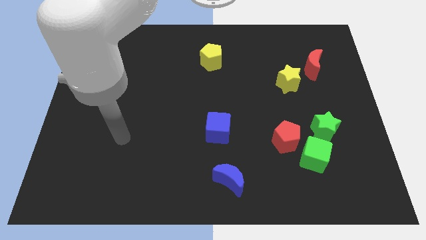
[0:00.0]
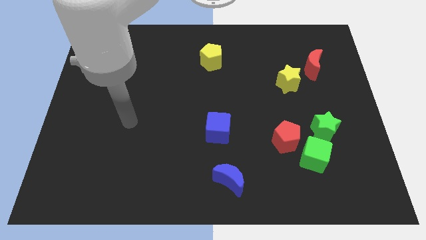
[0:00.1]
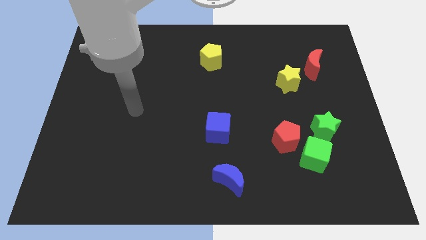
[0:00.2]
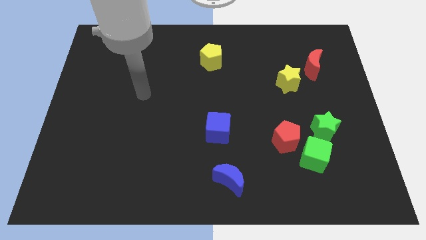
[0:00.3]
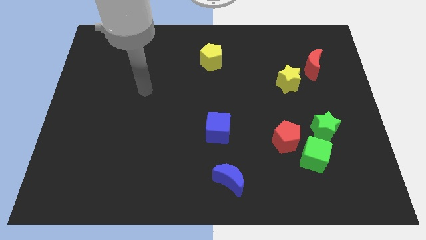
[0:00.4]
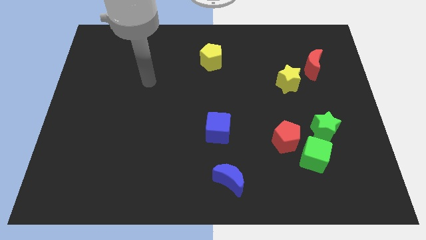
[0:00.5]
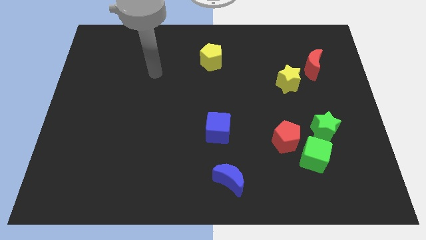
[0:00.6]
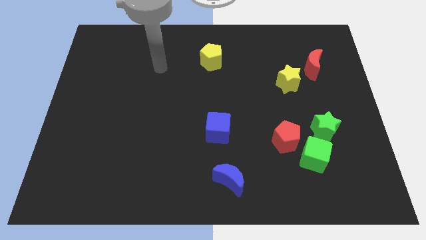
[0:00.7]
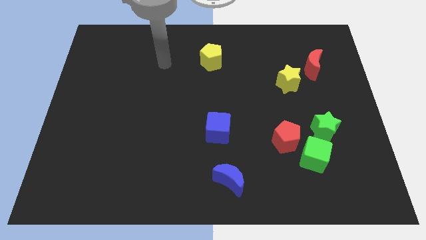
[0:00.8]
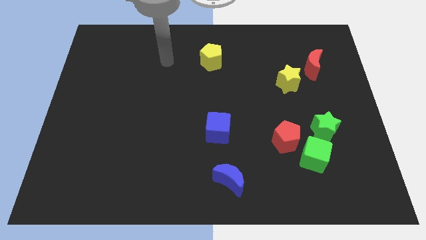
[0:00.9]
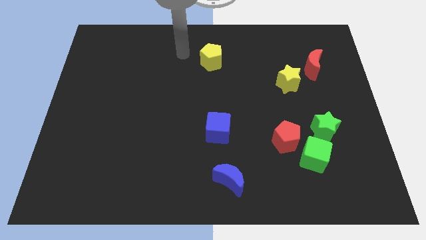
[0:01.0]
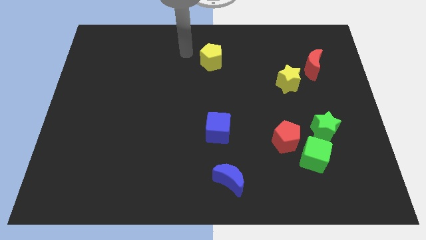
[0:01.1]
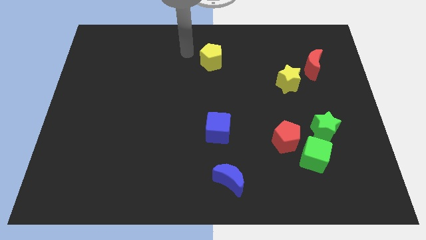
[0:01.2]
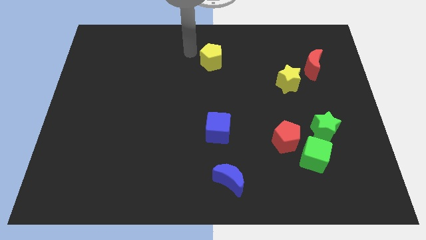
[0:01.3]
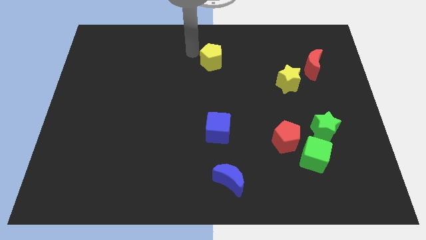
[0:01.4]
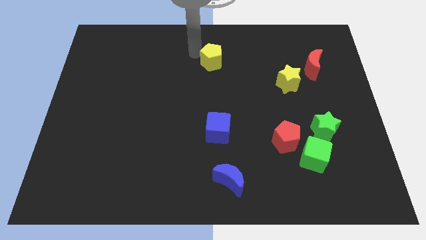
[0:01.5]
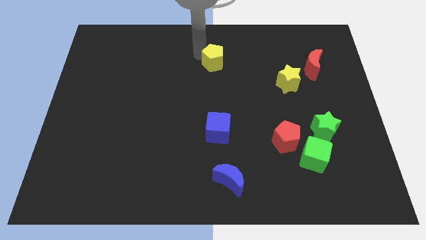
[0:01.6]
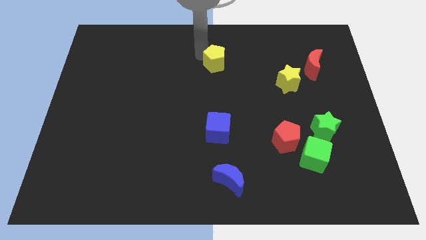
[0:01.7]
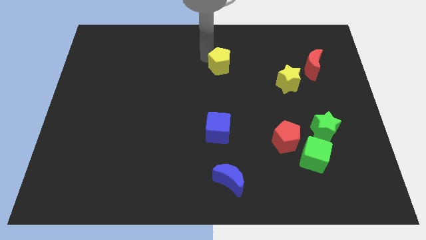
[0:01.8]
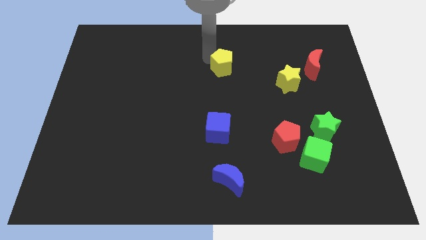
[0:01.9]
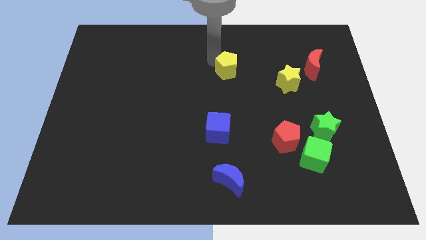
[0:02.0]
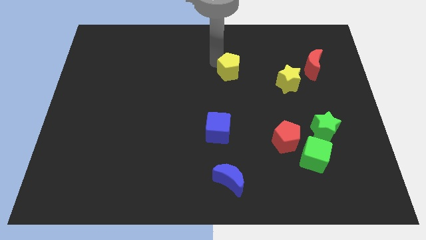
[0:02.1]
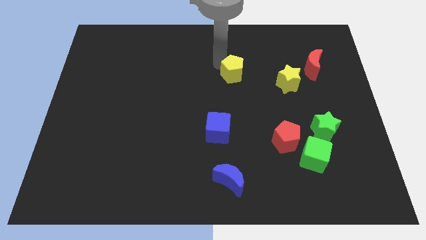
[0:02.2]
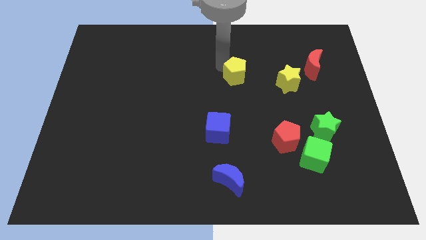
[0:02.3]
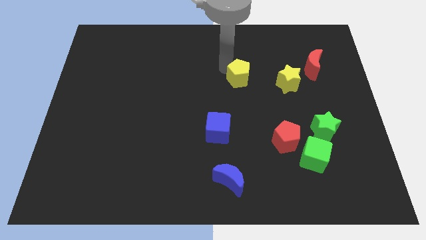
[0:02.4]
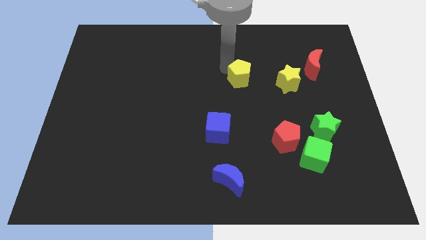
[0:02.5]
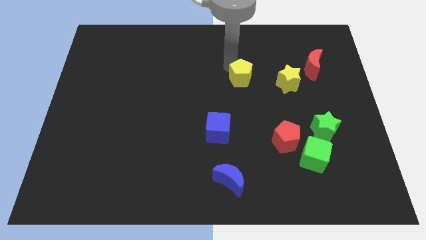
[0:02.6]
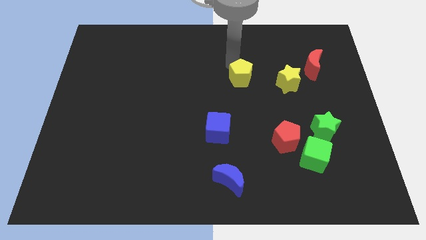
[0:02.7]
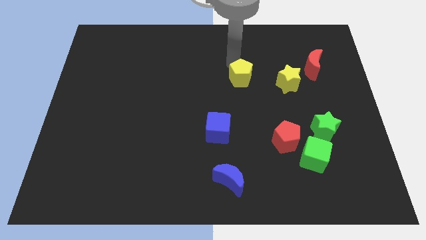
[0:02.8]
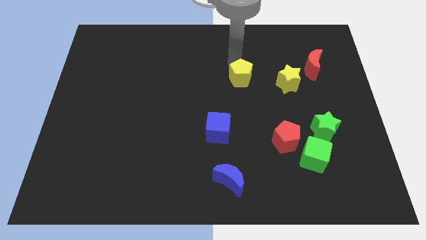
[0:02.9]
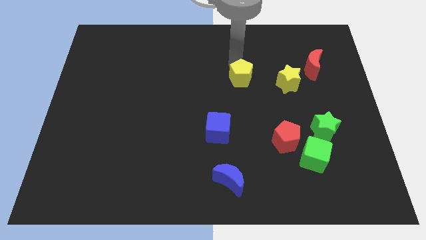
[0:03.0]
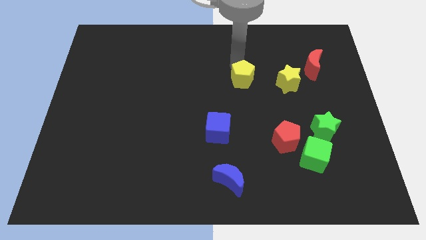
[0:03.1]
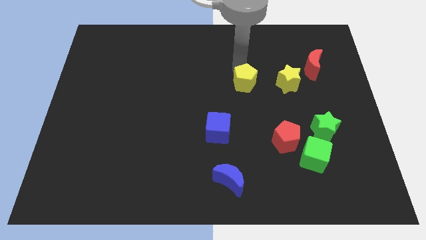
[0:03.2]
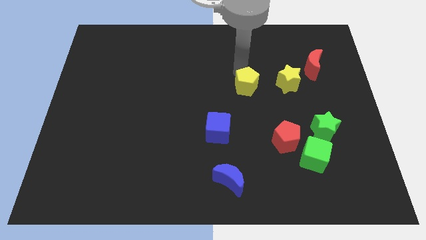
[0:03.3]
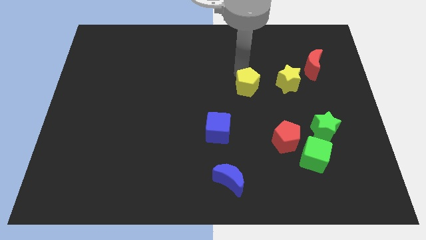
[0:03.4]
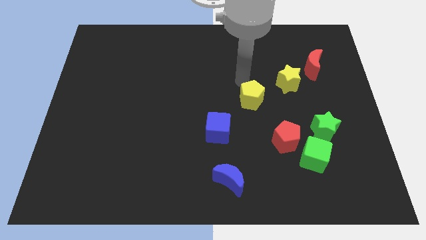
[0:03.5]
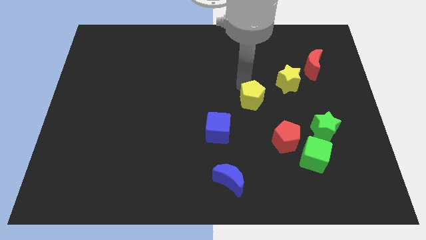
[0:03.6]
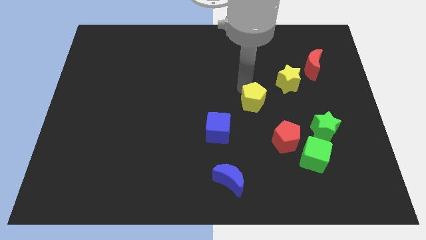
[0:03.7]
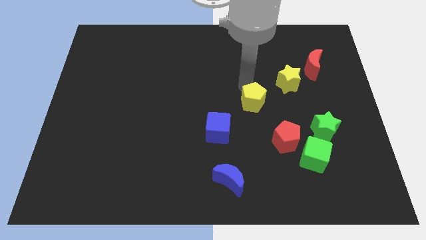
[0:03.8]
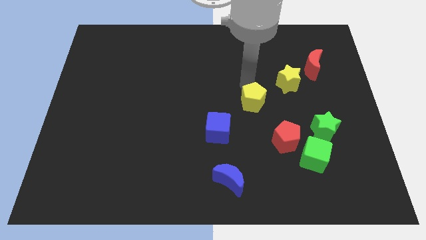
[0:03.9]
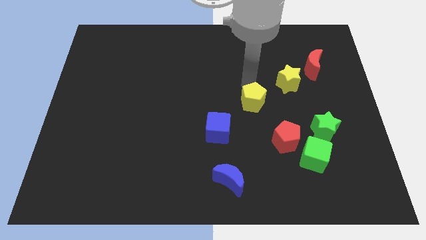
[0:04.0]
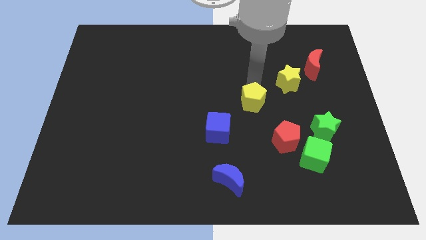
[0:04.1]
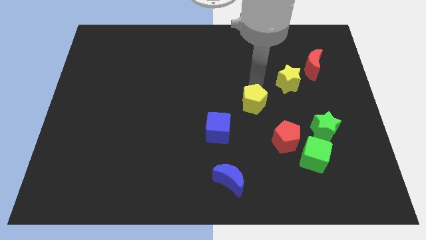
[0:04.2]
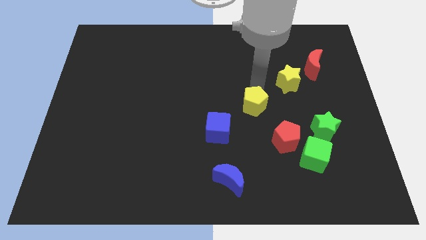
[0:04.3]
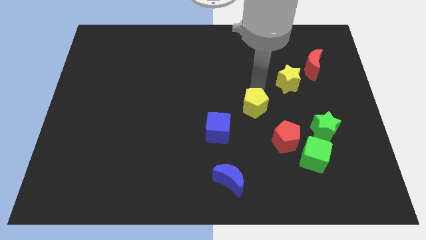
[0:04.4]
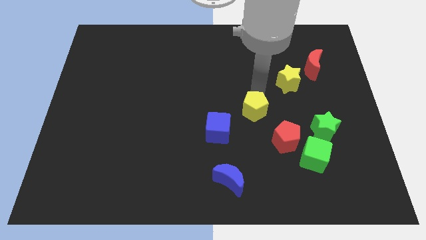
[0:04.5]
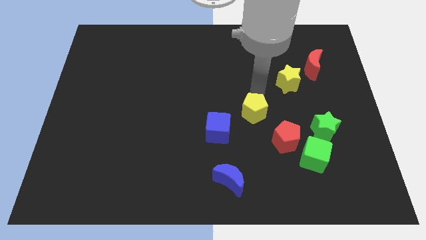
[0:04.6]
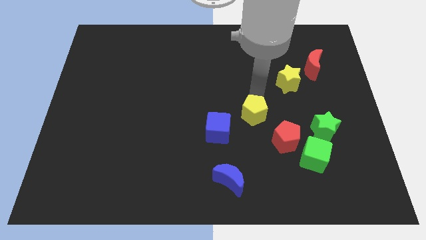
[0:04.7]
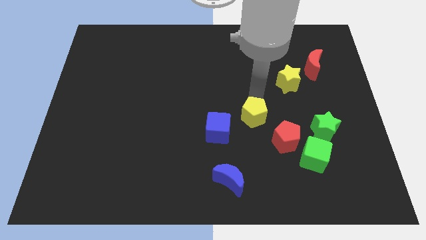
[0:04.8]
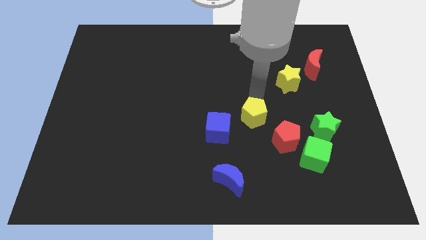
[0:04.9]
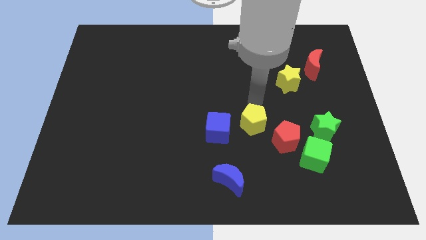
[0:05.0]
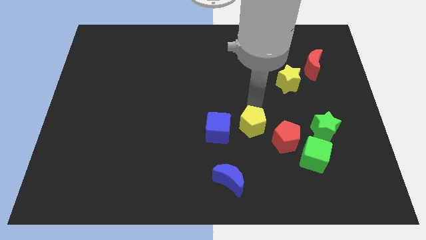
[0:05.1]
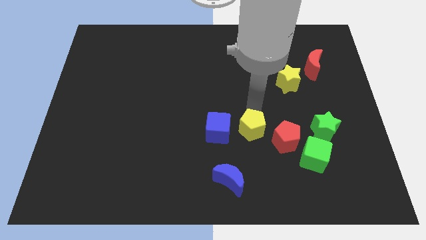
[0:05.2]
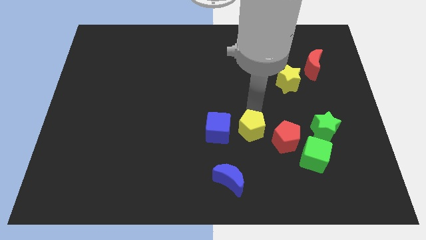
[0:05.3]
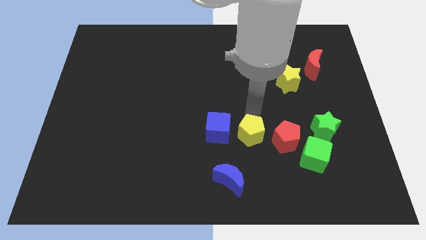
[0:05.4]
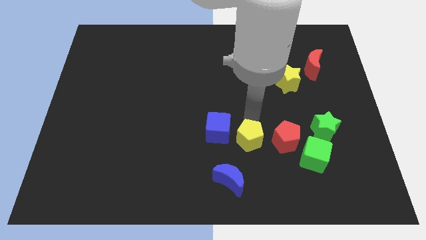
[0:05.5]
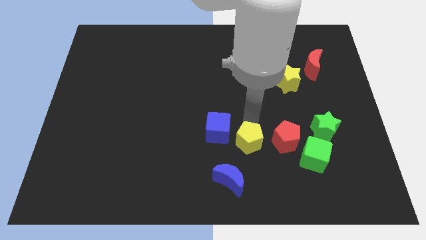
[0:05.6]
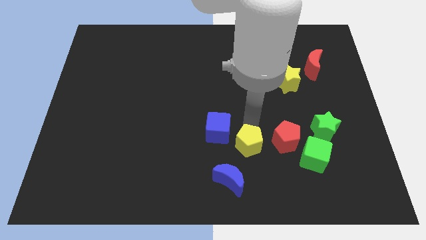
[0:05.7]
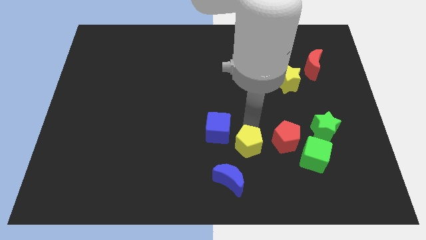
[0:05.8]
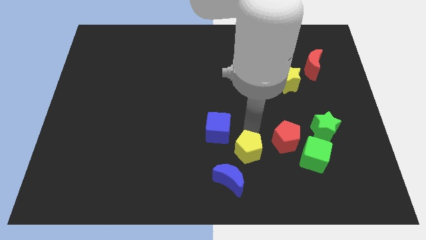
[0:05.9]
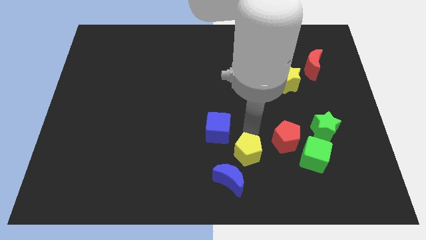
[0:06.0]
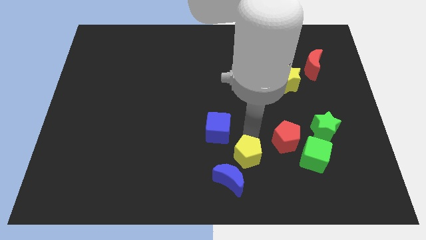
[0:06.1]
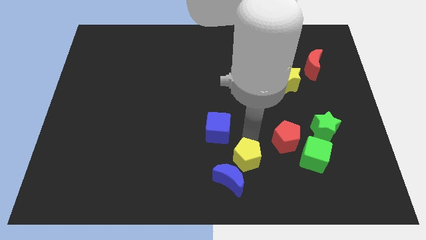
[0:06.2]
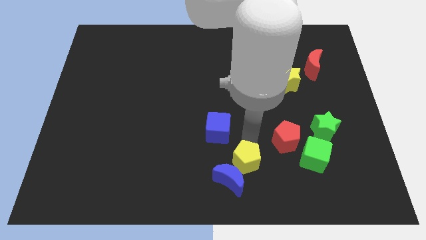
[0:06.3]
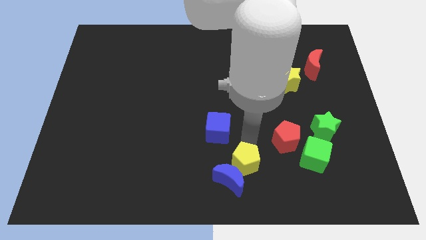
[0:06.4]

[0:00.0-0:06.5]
slide the yellow pentagon close to the blue moon

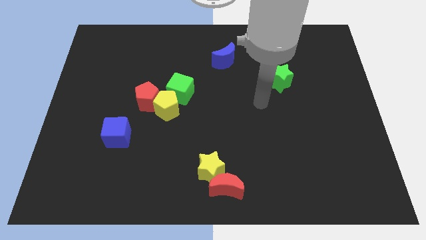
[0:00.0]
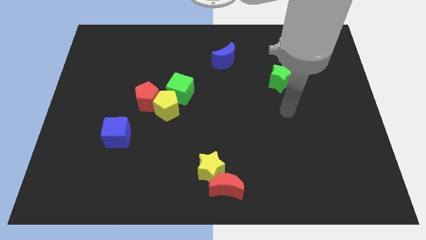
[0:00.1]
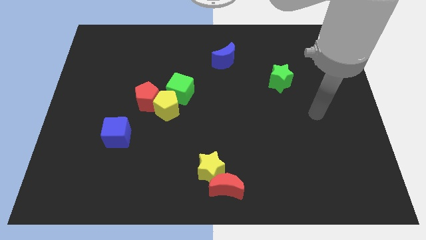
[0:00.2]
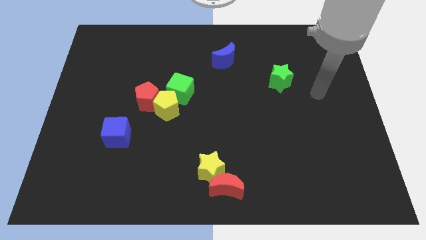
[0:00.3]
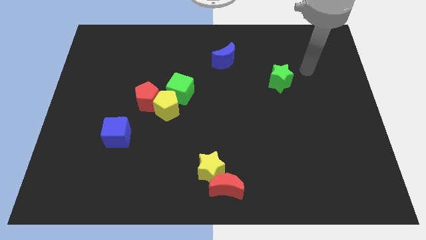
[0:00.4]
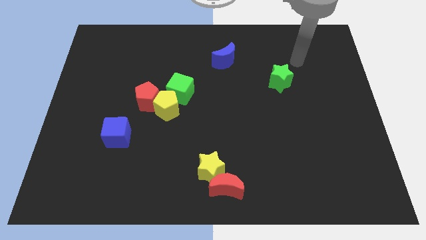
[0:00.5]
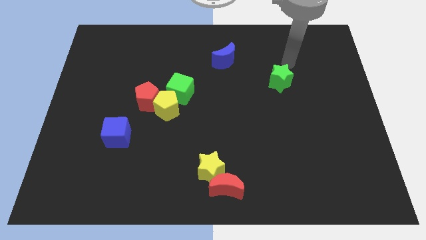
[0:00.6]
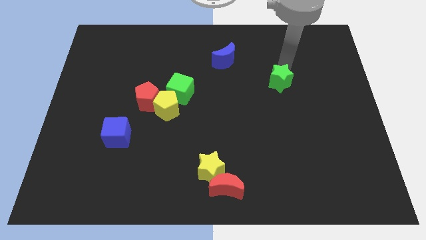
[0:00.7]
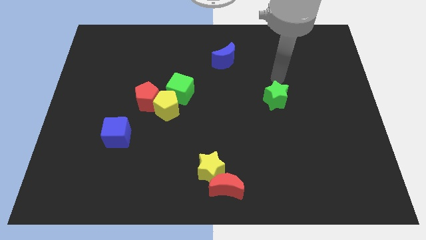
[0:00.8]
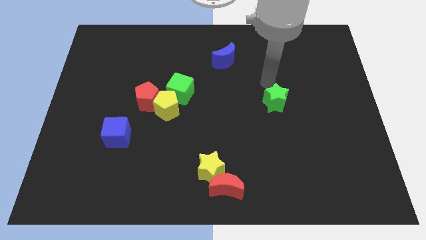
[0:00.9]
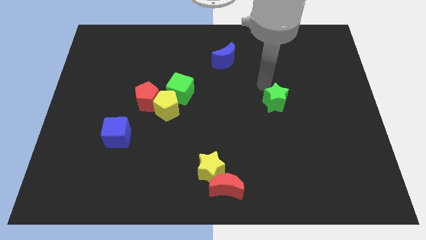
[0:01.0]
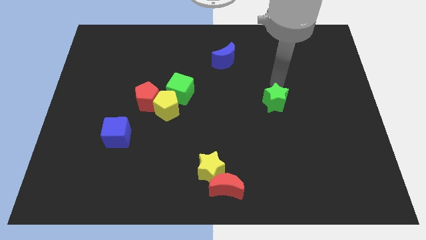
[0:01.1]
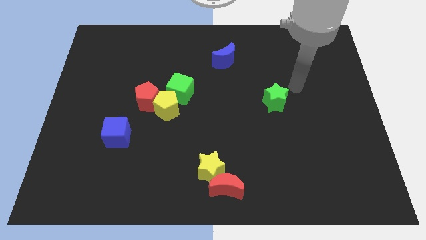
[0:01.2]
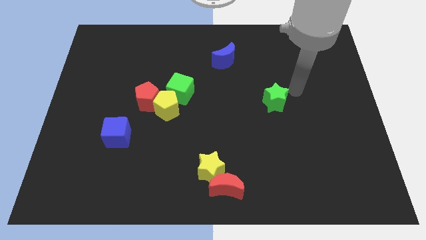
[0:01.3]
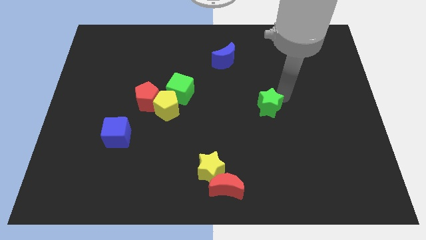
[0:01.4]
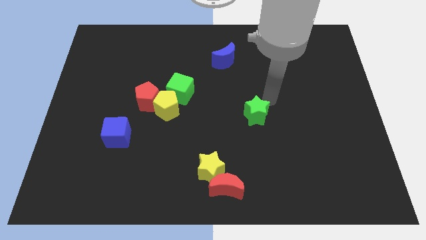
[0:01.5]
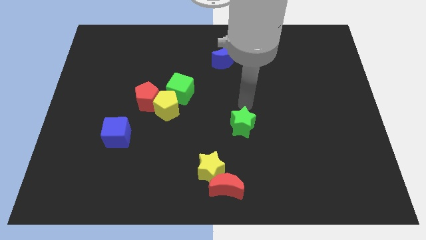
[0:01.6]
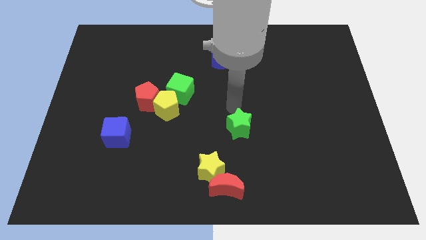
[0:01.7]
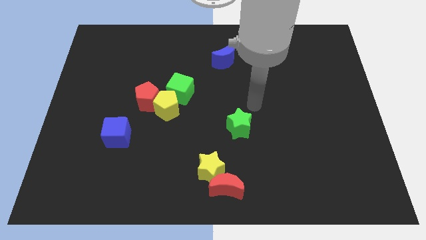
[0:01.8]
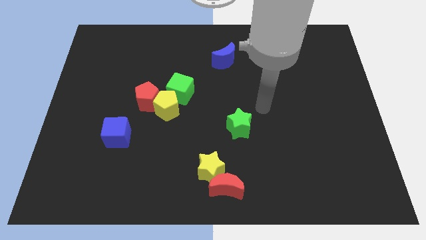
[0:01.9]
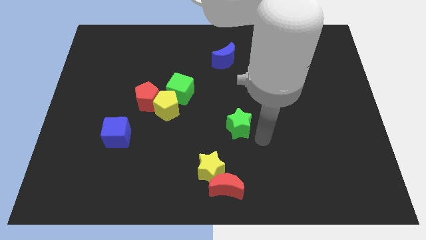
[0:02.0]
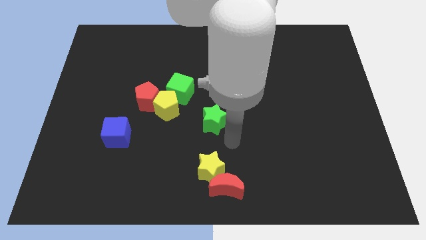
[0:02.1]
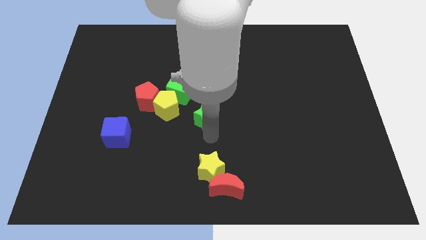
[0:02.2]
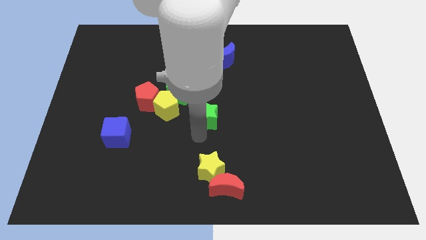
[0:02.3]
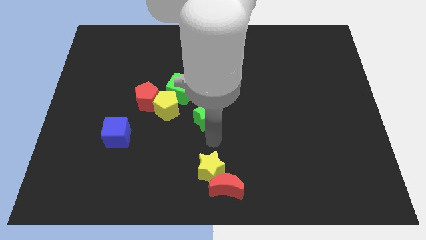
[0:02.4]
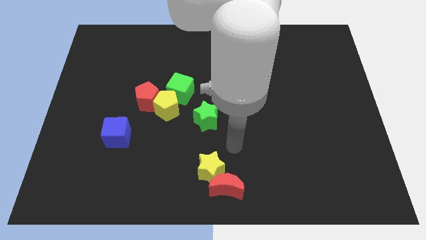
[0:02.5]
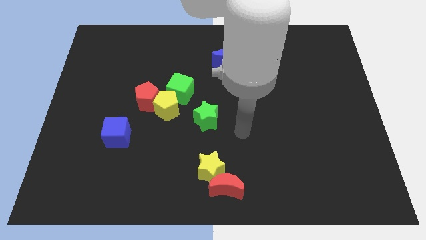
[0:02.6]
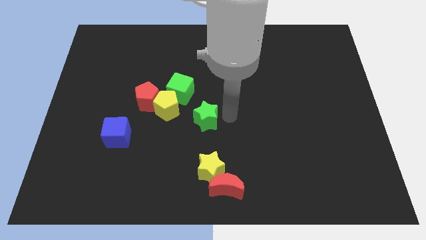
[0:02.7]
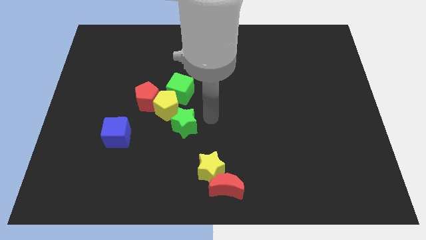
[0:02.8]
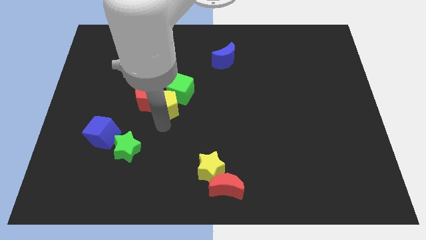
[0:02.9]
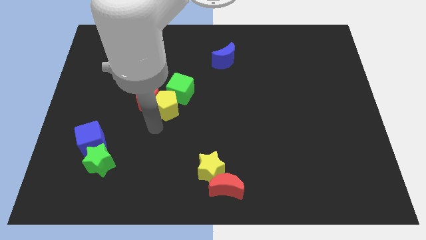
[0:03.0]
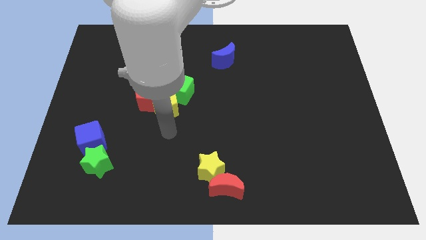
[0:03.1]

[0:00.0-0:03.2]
move the green star towards the blue cube
